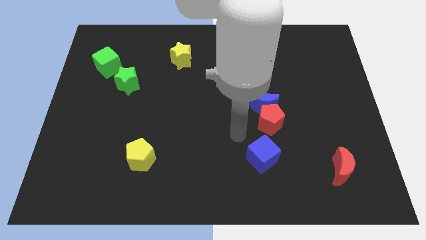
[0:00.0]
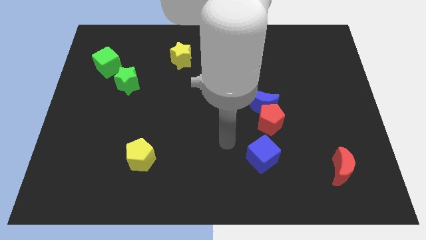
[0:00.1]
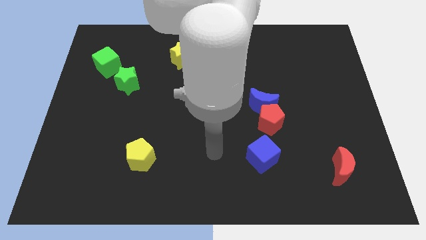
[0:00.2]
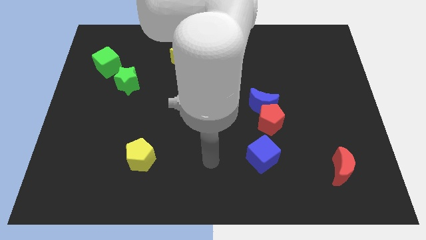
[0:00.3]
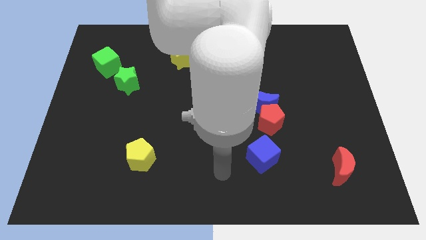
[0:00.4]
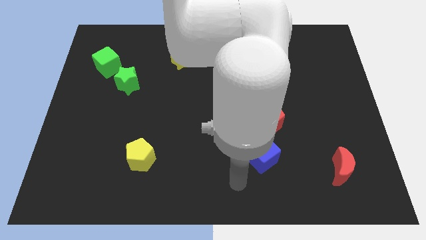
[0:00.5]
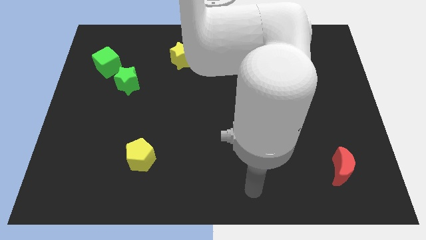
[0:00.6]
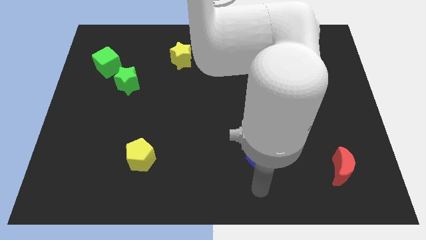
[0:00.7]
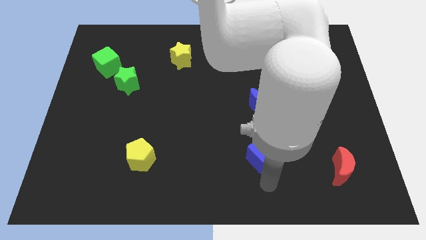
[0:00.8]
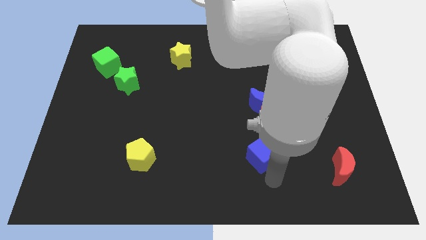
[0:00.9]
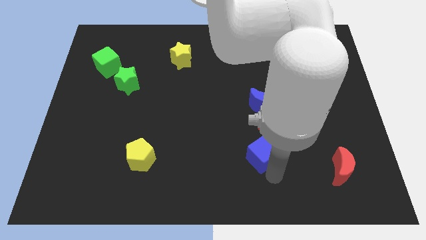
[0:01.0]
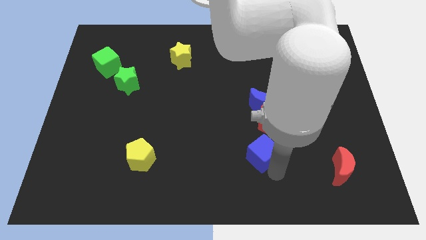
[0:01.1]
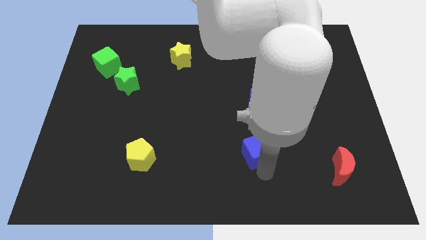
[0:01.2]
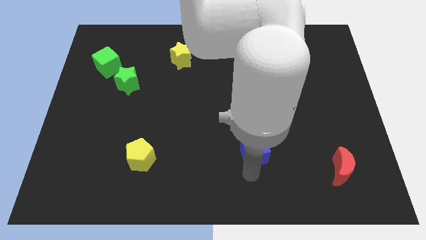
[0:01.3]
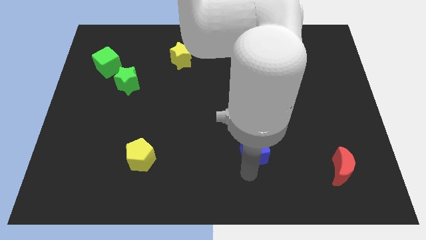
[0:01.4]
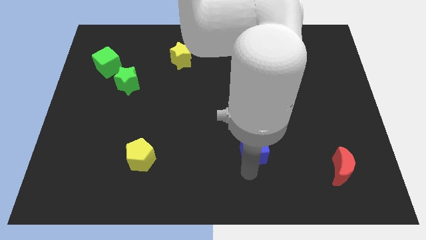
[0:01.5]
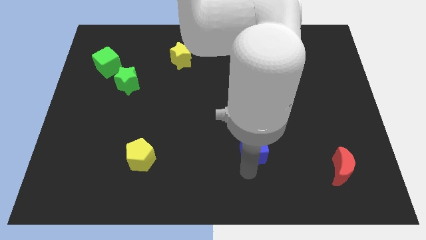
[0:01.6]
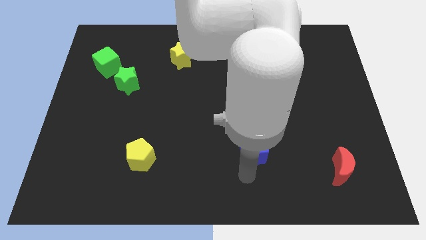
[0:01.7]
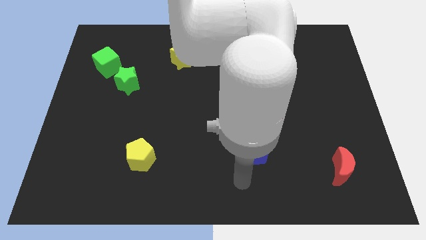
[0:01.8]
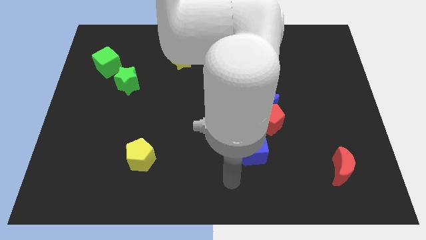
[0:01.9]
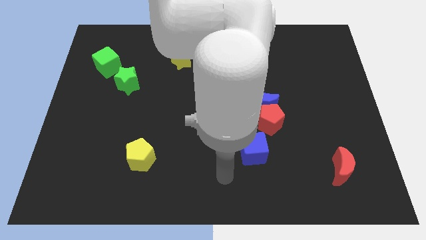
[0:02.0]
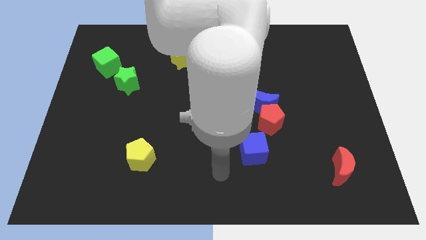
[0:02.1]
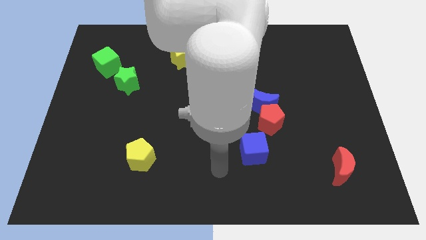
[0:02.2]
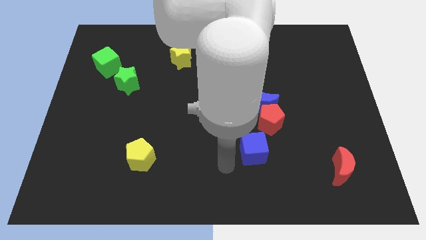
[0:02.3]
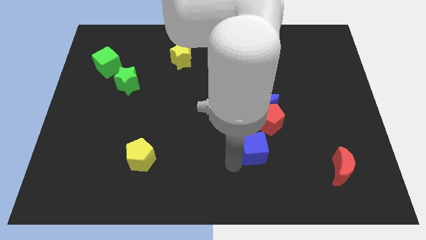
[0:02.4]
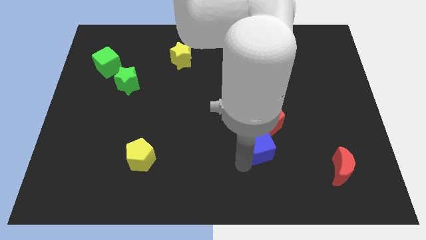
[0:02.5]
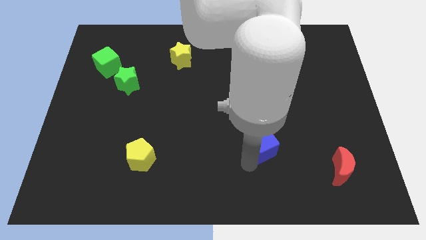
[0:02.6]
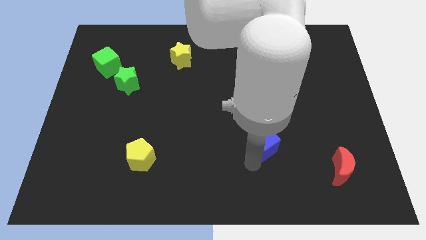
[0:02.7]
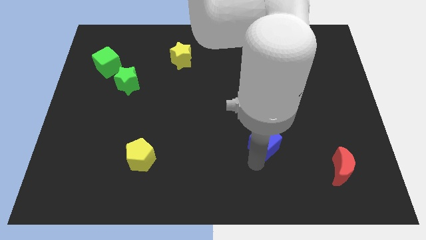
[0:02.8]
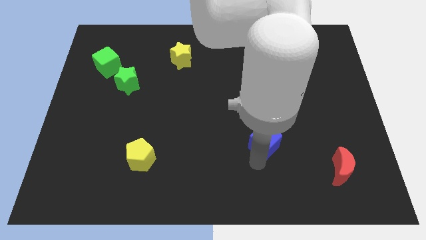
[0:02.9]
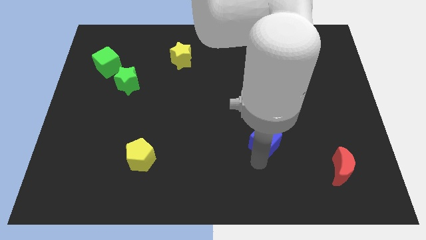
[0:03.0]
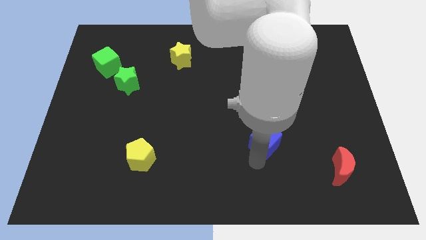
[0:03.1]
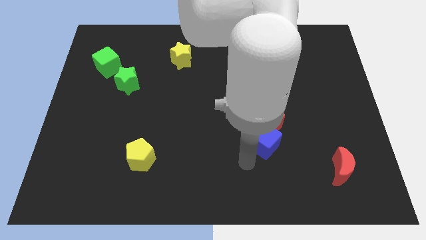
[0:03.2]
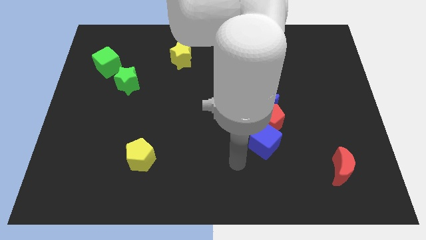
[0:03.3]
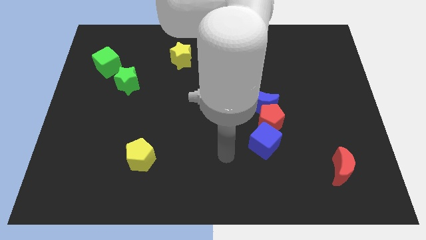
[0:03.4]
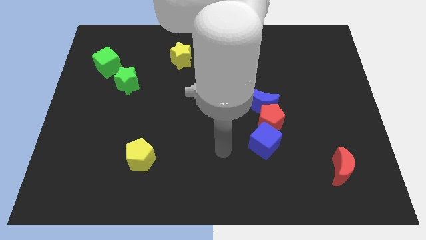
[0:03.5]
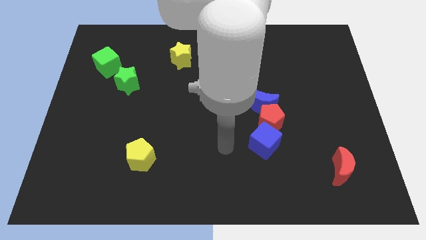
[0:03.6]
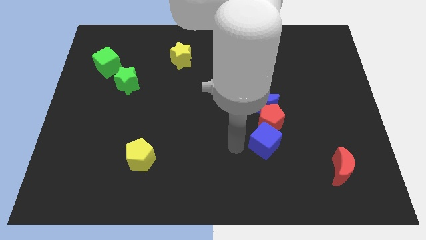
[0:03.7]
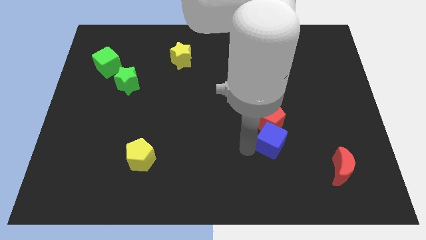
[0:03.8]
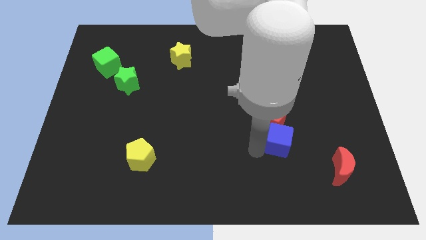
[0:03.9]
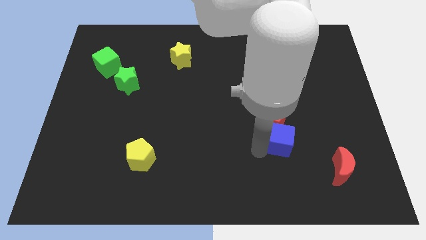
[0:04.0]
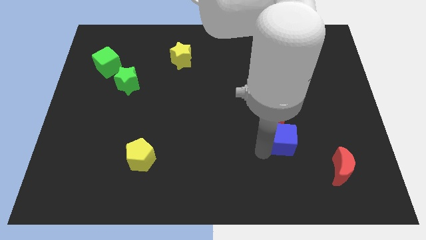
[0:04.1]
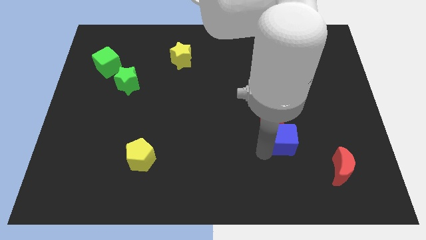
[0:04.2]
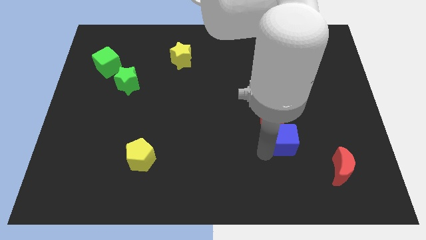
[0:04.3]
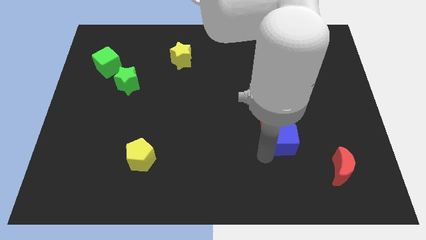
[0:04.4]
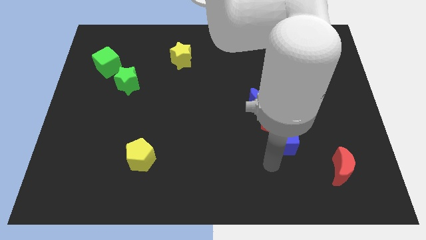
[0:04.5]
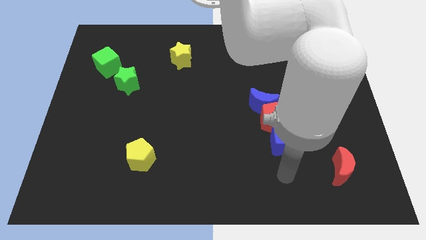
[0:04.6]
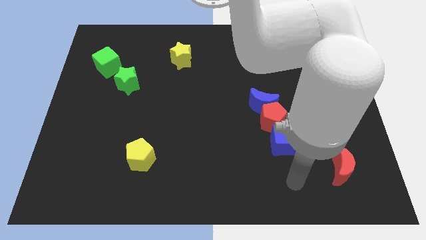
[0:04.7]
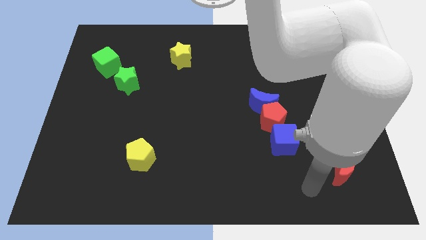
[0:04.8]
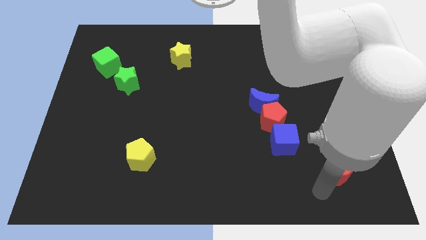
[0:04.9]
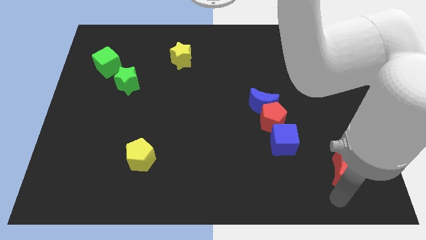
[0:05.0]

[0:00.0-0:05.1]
slide the blue cube into the red pentagon

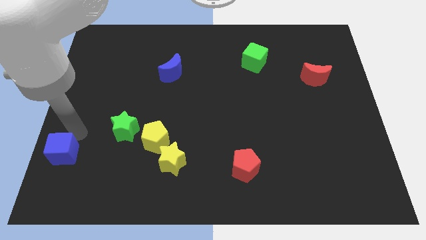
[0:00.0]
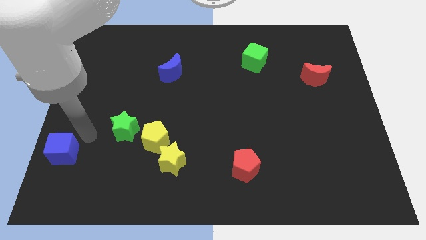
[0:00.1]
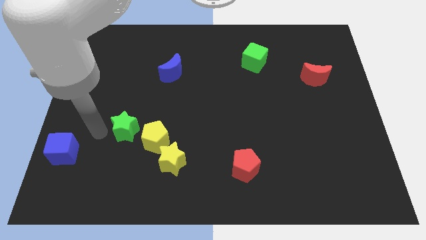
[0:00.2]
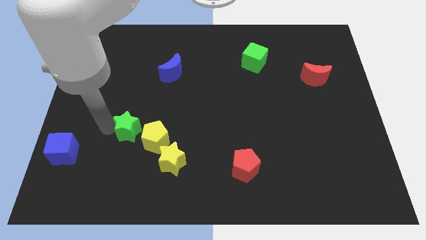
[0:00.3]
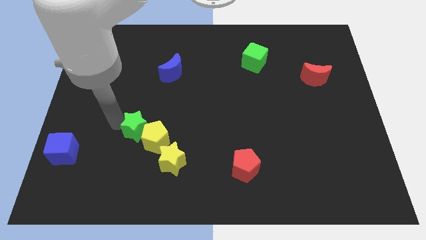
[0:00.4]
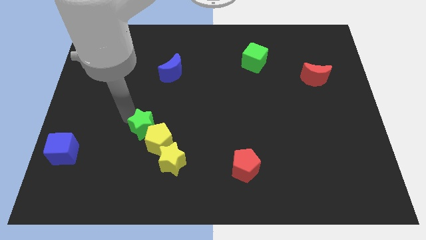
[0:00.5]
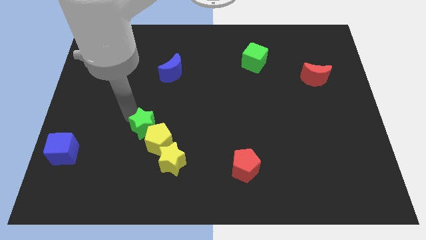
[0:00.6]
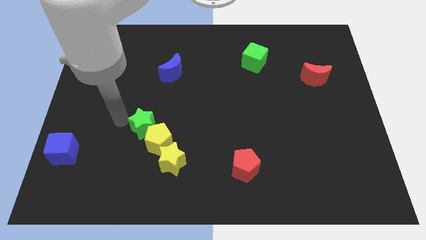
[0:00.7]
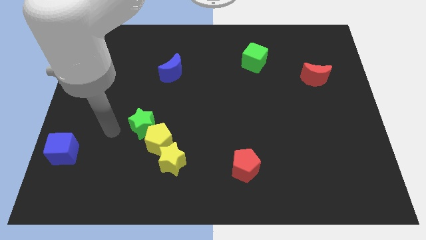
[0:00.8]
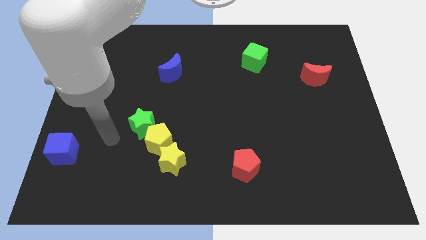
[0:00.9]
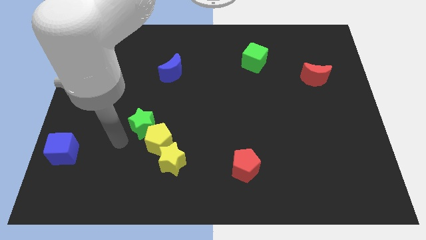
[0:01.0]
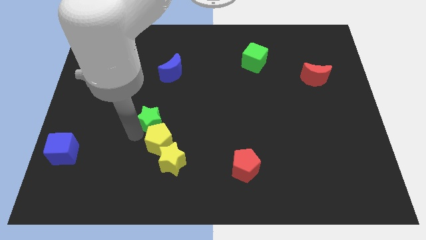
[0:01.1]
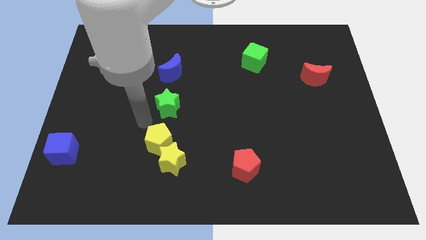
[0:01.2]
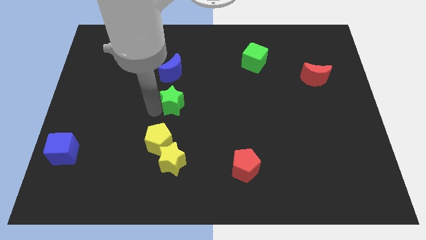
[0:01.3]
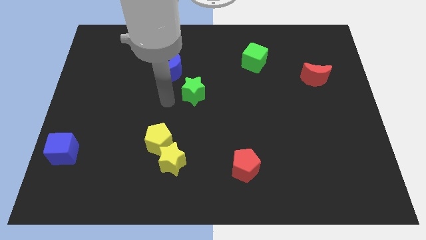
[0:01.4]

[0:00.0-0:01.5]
put the green star below the blue moon

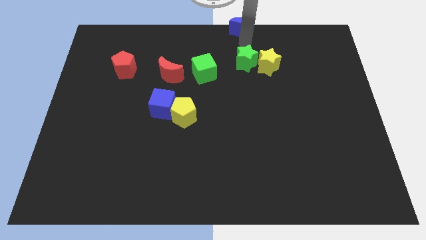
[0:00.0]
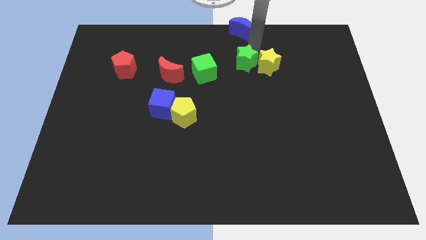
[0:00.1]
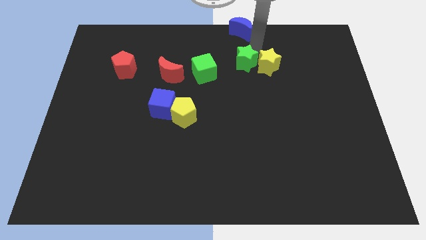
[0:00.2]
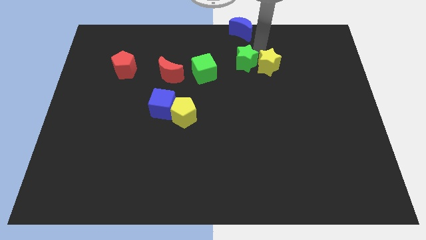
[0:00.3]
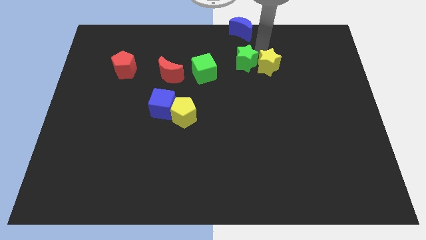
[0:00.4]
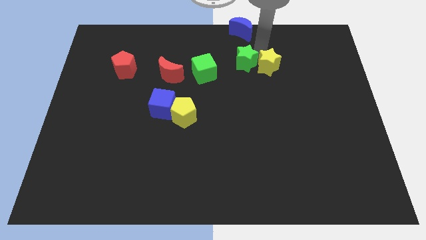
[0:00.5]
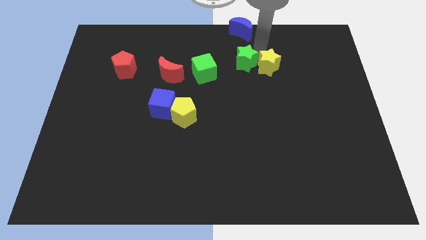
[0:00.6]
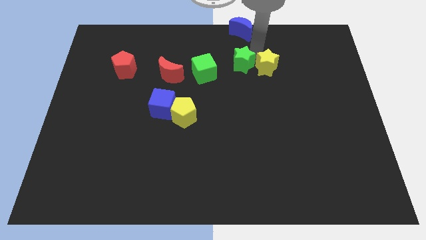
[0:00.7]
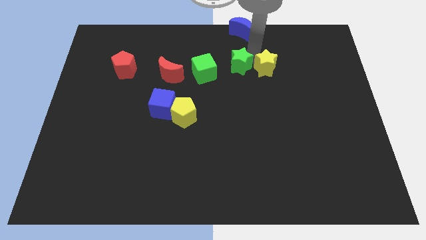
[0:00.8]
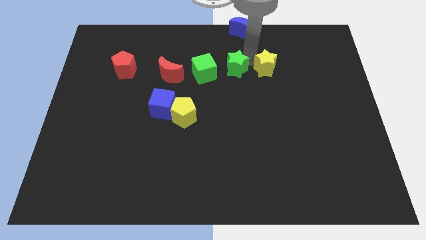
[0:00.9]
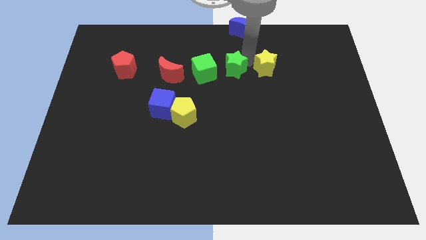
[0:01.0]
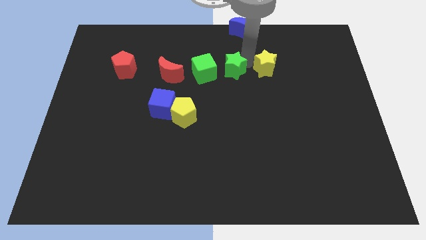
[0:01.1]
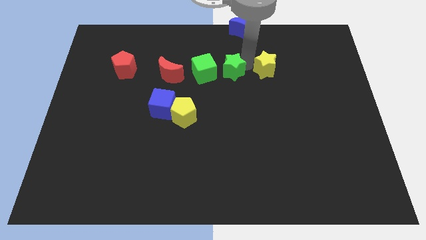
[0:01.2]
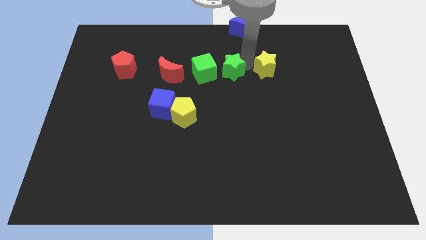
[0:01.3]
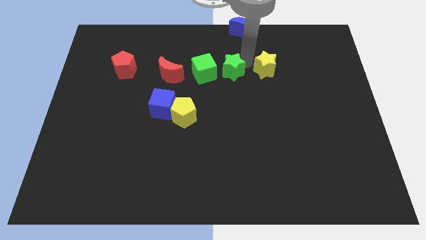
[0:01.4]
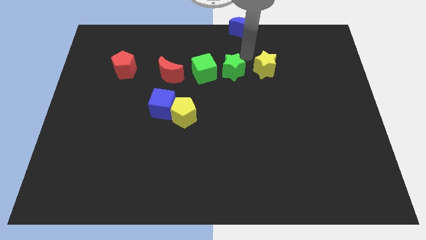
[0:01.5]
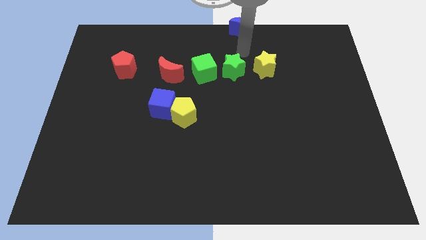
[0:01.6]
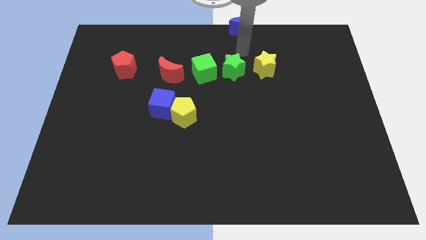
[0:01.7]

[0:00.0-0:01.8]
put the green star to the right side of the green cube

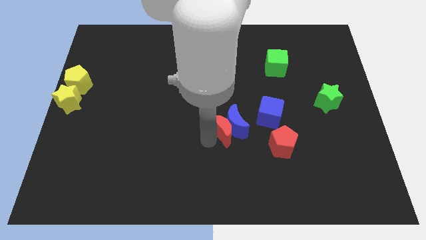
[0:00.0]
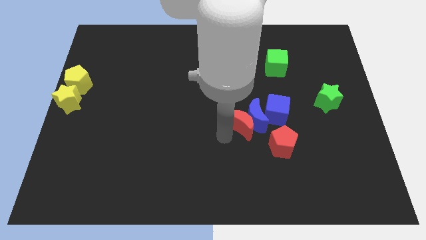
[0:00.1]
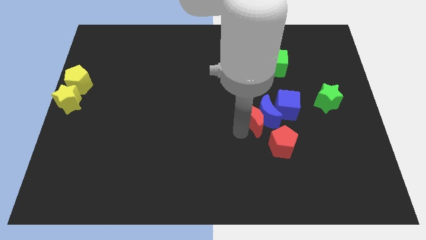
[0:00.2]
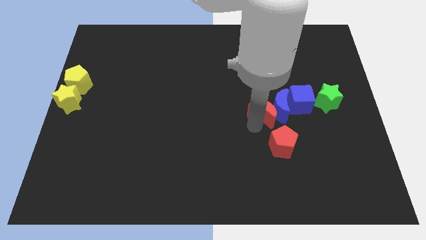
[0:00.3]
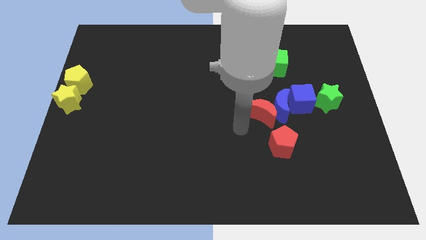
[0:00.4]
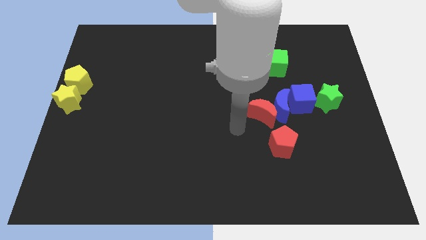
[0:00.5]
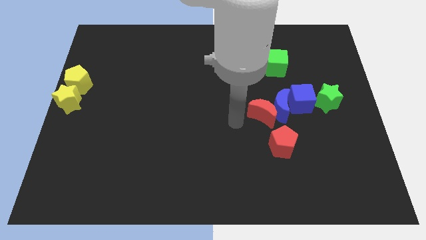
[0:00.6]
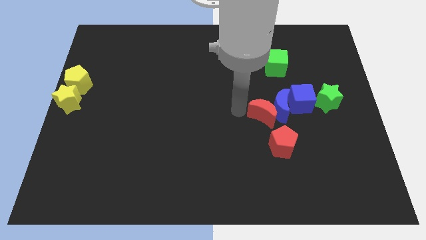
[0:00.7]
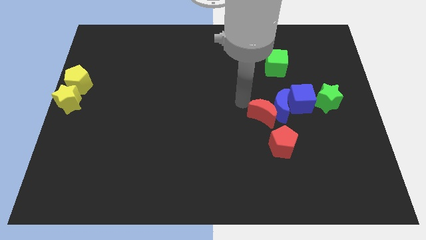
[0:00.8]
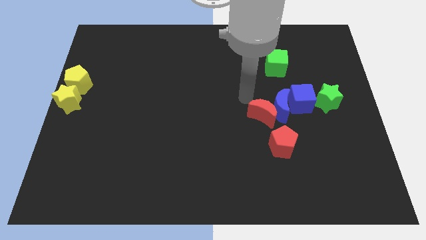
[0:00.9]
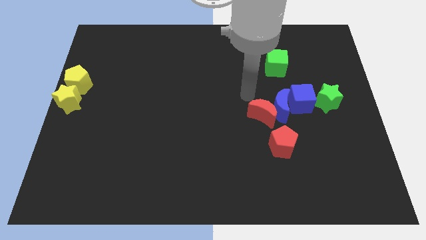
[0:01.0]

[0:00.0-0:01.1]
push the blue moon into the blue cube
